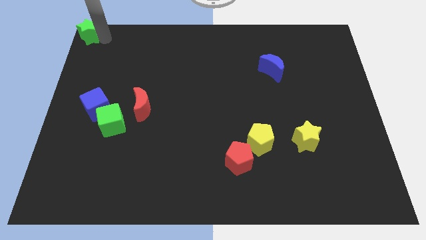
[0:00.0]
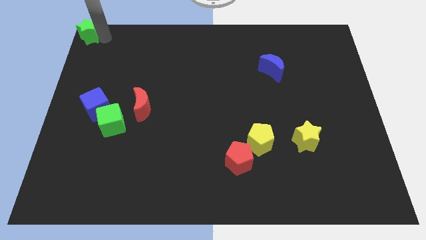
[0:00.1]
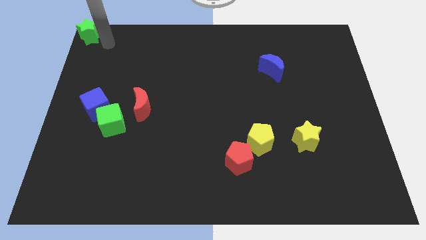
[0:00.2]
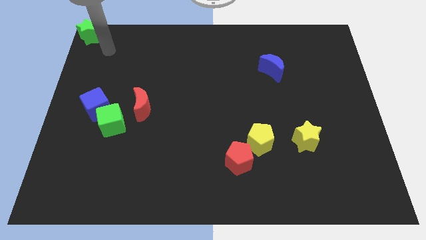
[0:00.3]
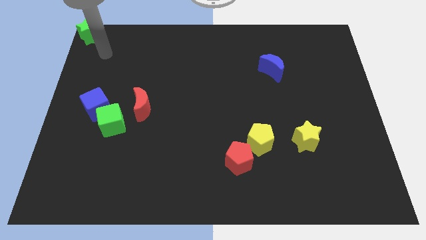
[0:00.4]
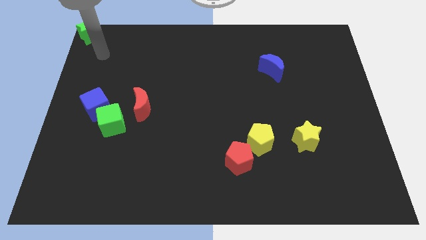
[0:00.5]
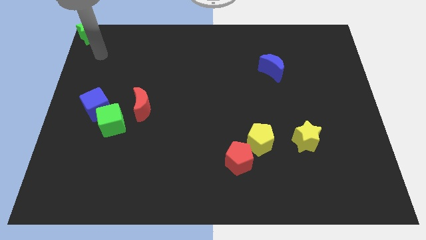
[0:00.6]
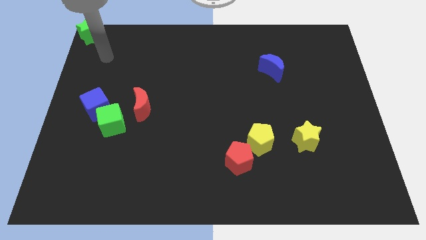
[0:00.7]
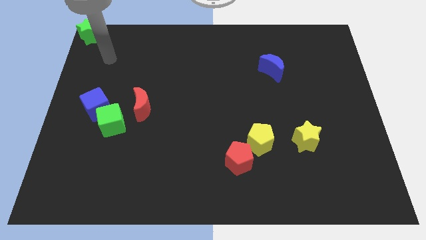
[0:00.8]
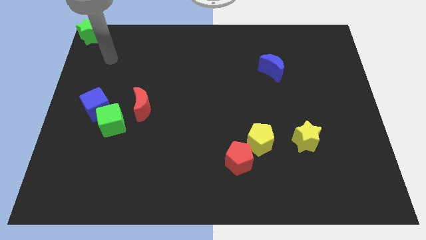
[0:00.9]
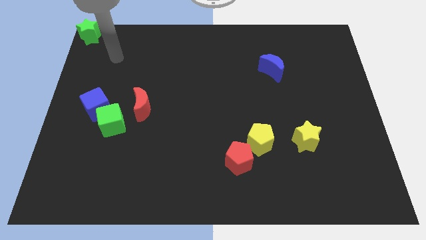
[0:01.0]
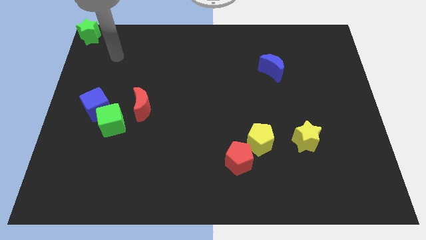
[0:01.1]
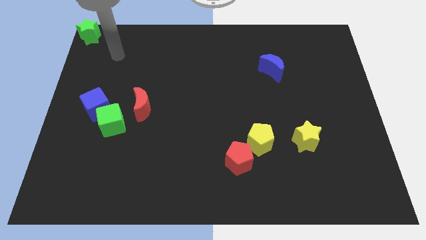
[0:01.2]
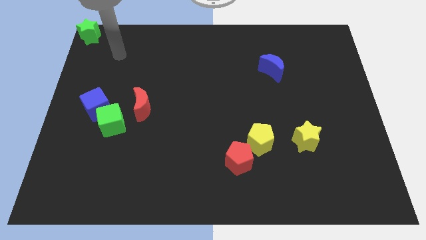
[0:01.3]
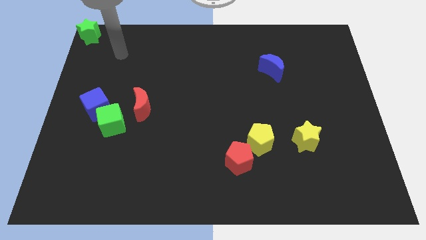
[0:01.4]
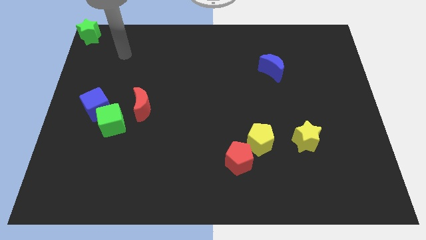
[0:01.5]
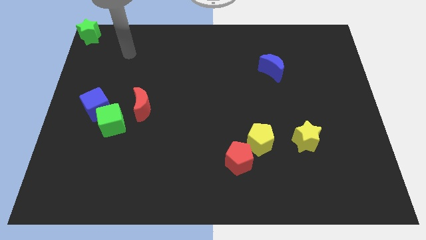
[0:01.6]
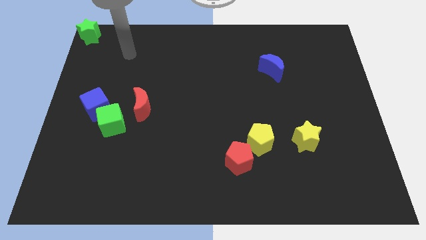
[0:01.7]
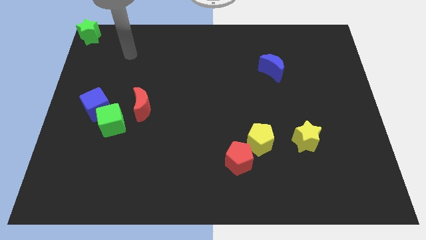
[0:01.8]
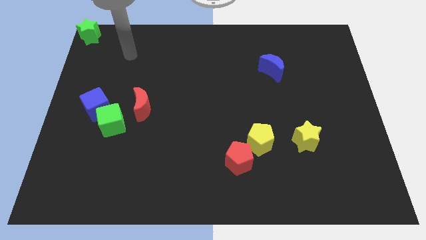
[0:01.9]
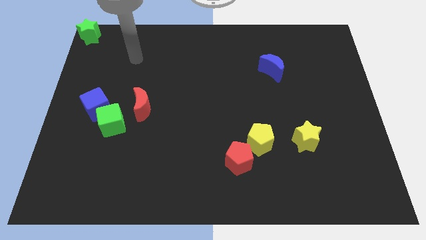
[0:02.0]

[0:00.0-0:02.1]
move your hand away from green star

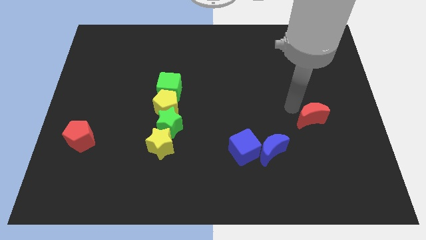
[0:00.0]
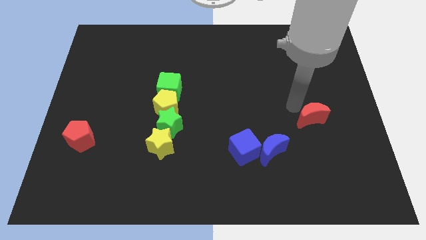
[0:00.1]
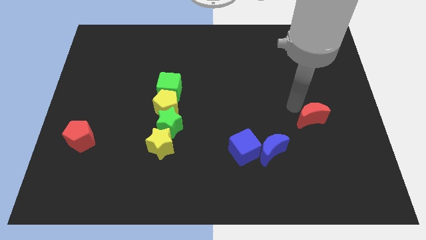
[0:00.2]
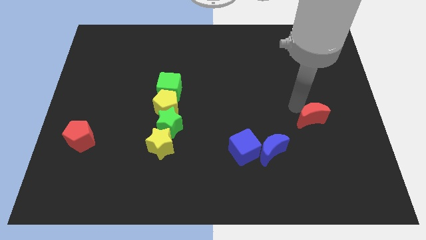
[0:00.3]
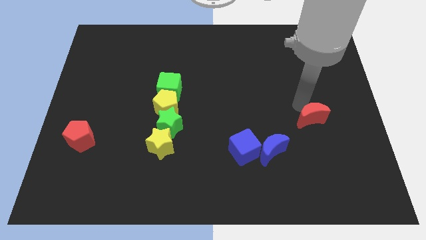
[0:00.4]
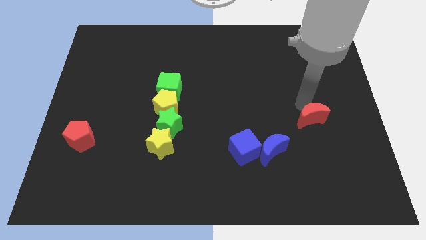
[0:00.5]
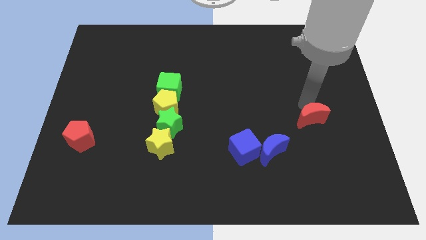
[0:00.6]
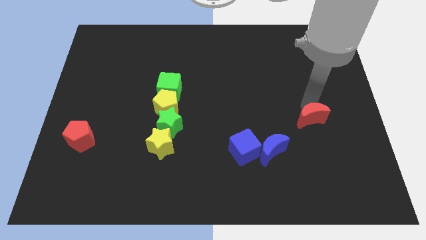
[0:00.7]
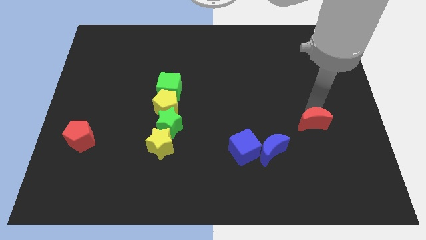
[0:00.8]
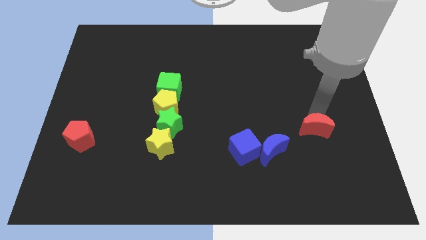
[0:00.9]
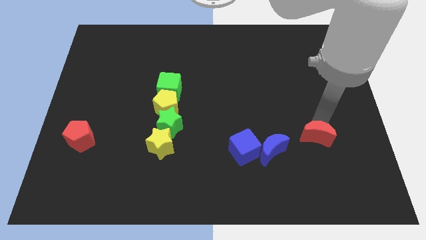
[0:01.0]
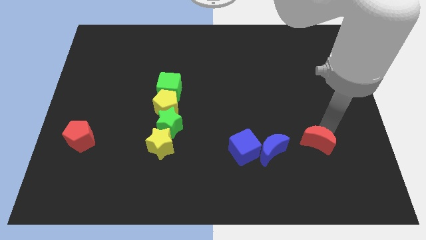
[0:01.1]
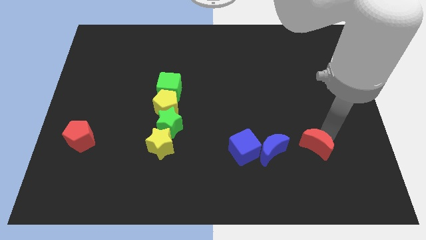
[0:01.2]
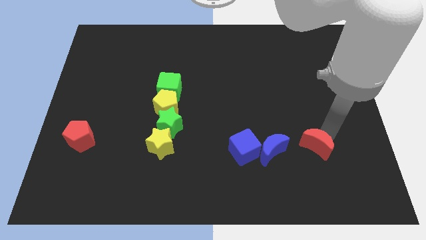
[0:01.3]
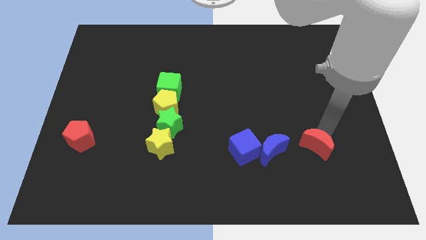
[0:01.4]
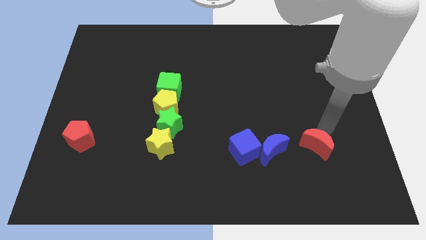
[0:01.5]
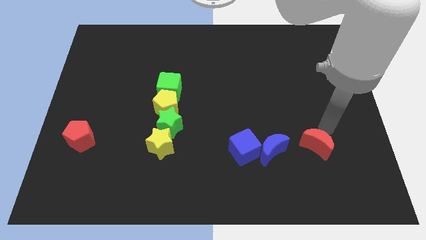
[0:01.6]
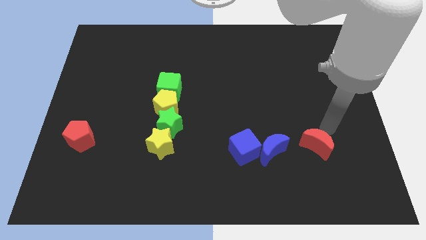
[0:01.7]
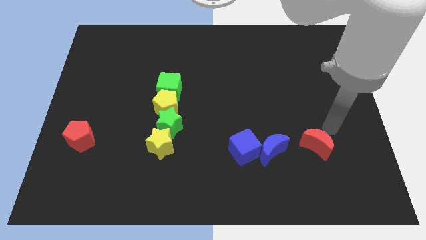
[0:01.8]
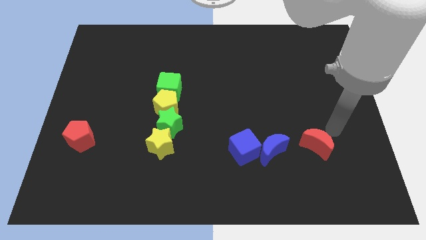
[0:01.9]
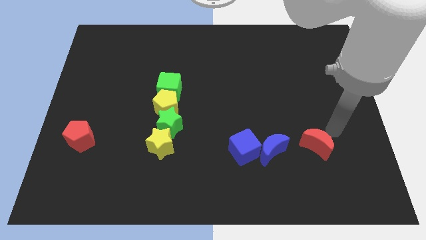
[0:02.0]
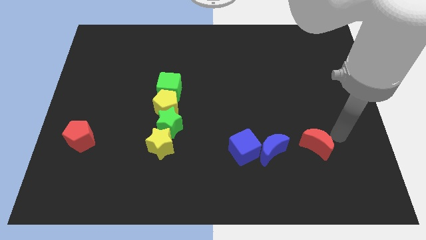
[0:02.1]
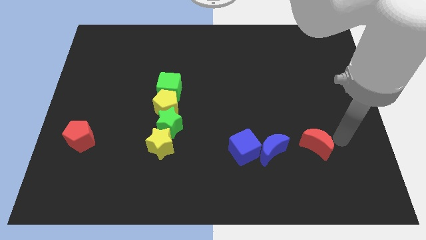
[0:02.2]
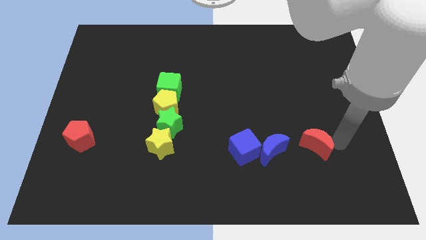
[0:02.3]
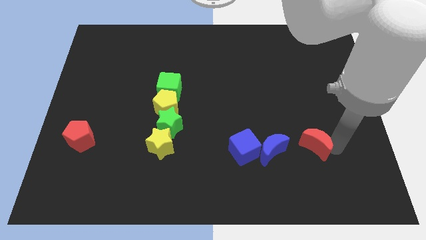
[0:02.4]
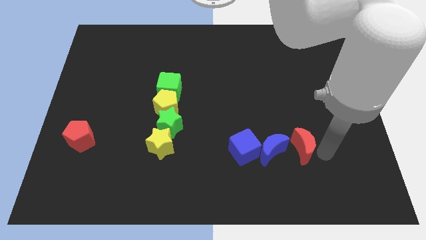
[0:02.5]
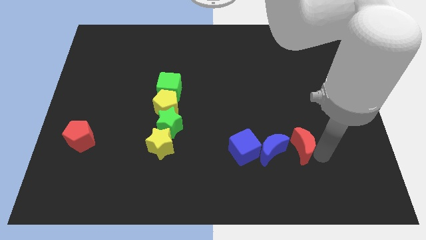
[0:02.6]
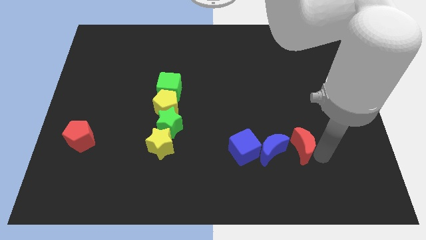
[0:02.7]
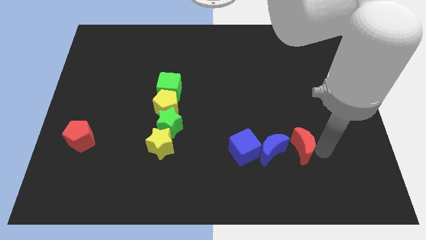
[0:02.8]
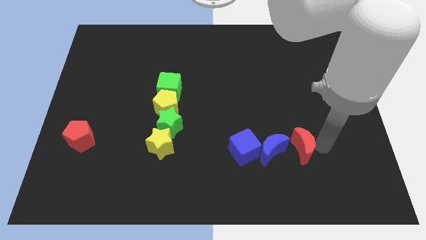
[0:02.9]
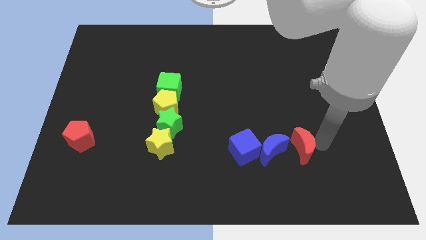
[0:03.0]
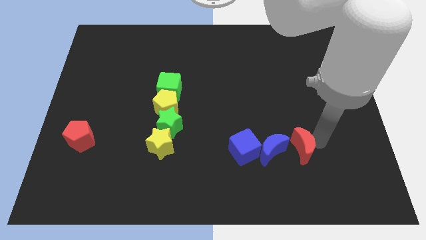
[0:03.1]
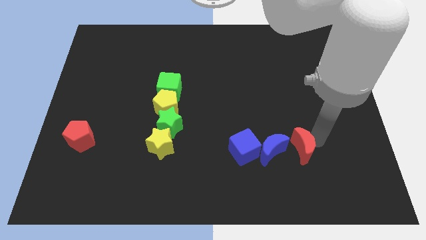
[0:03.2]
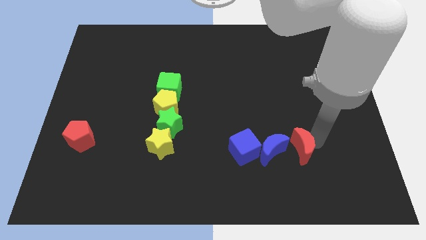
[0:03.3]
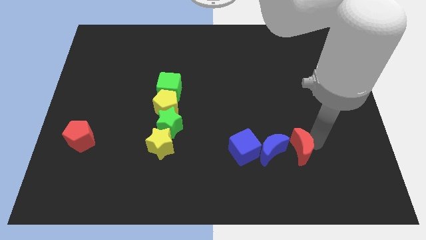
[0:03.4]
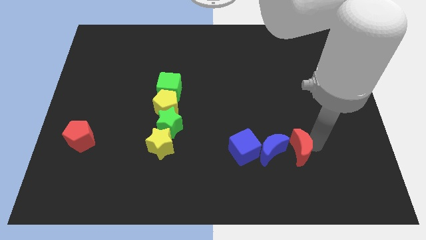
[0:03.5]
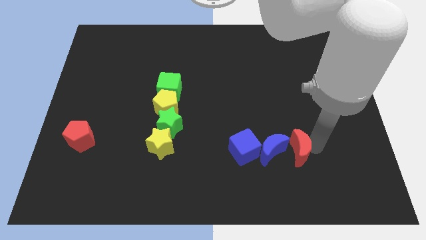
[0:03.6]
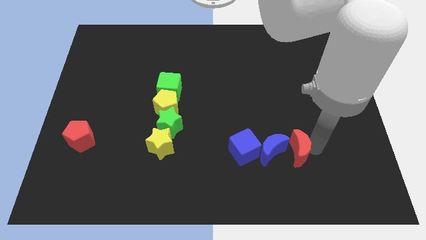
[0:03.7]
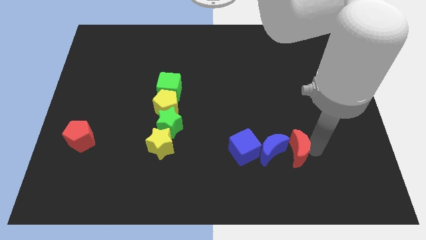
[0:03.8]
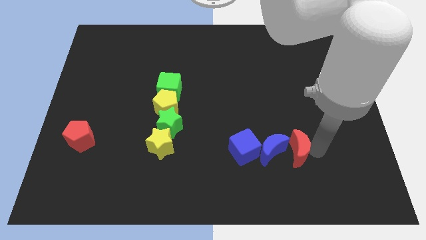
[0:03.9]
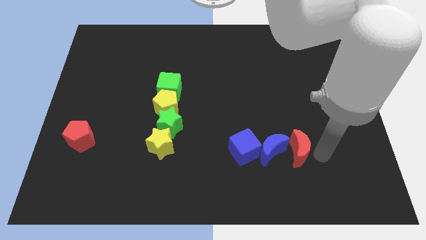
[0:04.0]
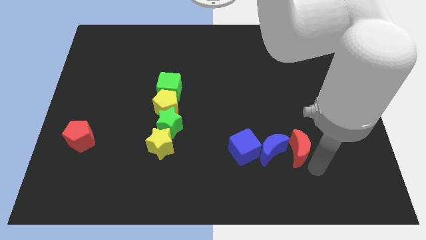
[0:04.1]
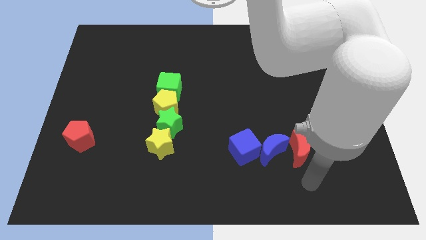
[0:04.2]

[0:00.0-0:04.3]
place the red moon to the right of the blue moon

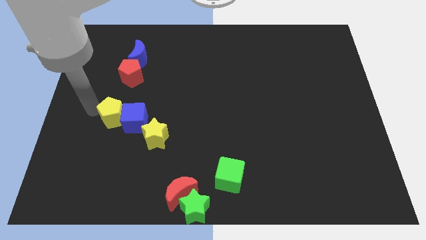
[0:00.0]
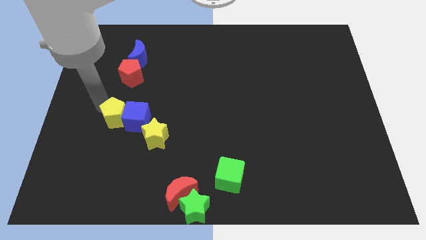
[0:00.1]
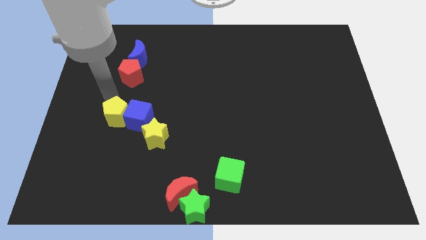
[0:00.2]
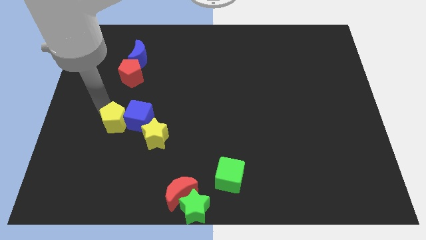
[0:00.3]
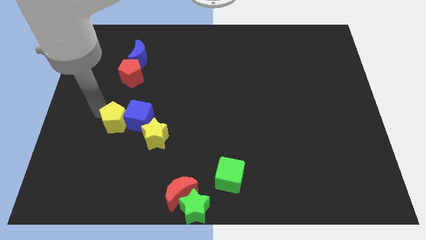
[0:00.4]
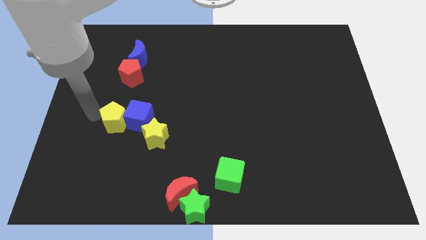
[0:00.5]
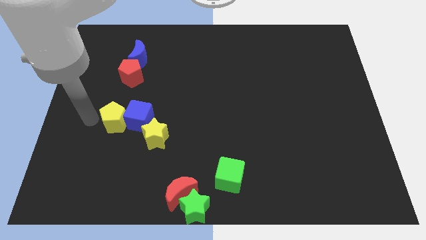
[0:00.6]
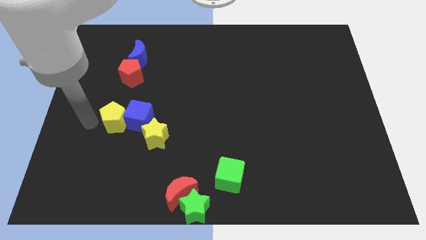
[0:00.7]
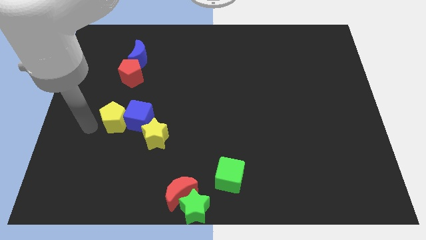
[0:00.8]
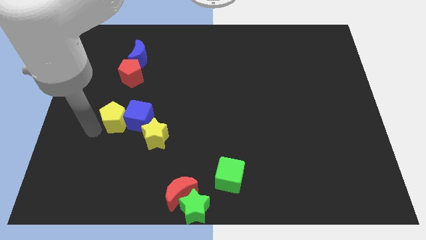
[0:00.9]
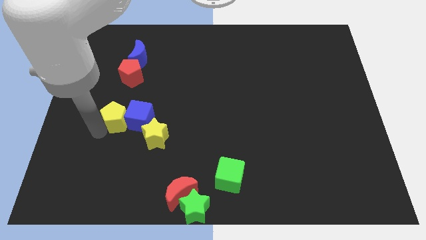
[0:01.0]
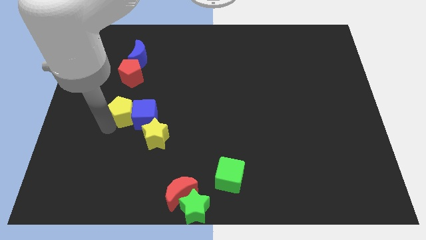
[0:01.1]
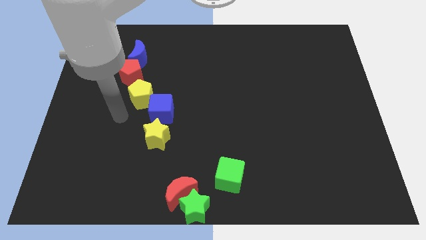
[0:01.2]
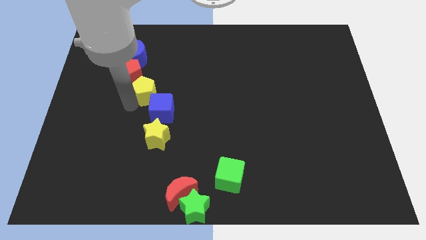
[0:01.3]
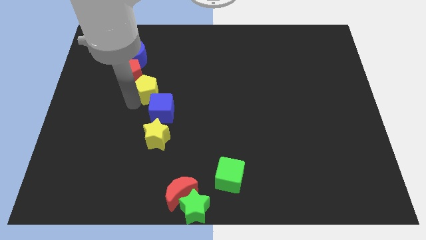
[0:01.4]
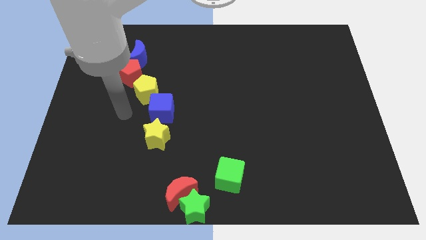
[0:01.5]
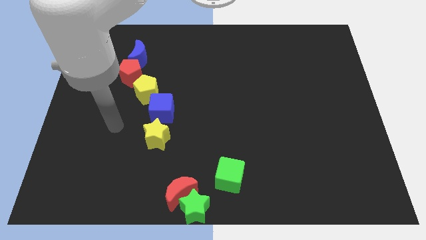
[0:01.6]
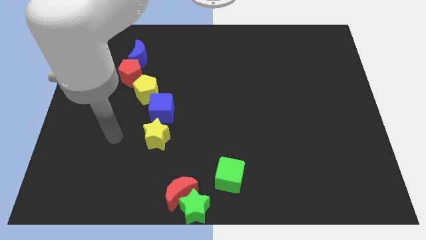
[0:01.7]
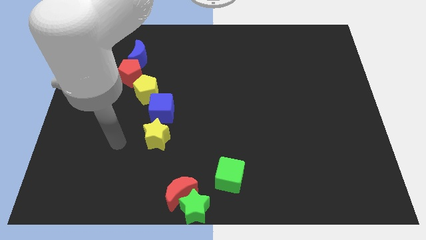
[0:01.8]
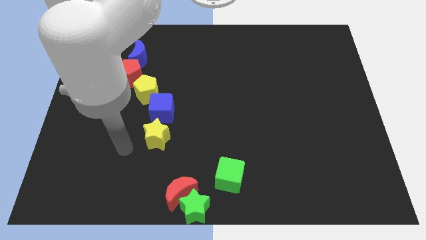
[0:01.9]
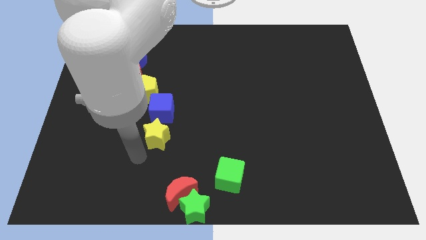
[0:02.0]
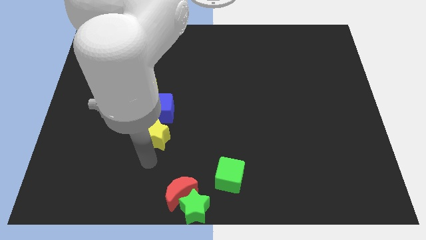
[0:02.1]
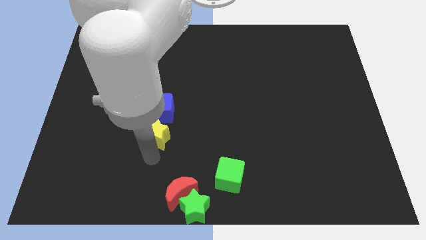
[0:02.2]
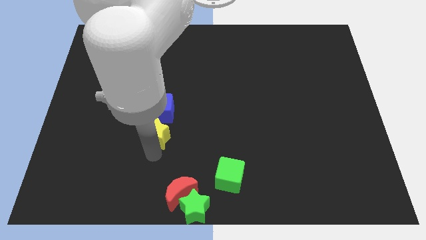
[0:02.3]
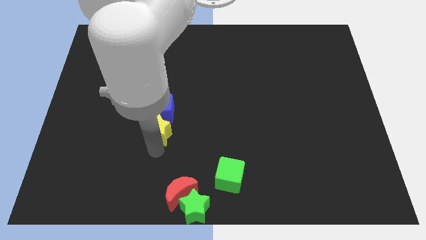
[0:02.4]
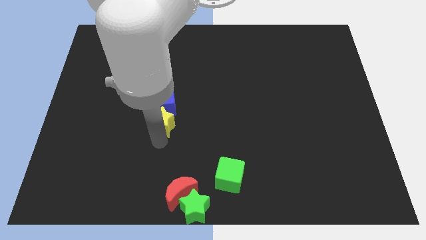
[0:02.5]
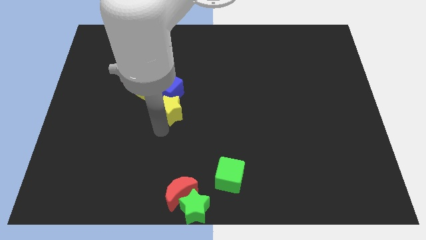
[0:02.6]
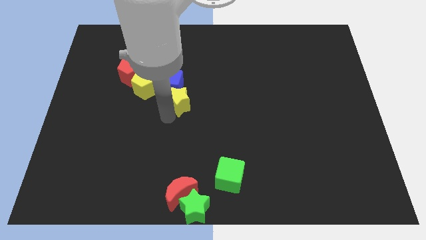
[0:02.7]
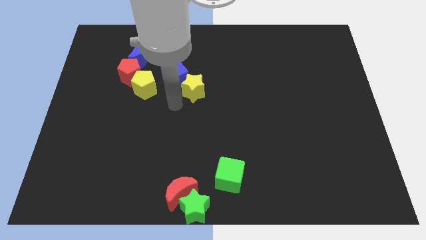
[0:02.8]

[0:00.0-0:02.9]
separate the yellow pentagon and the blue cube
